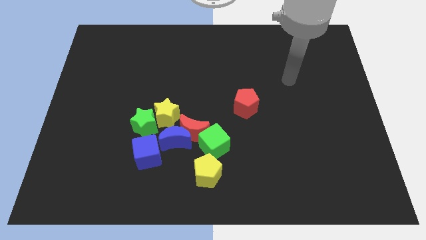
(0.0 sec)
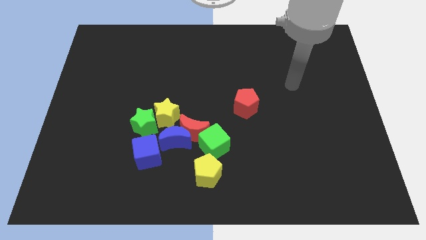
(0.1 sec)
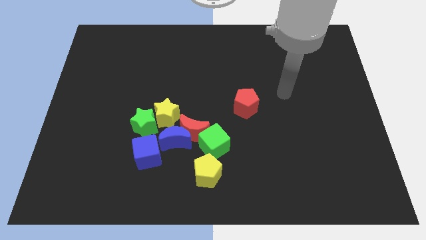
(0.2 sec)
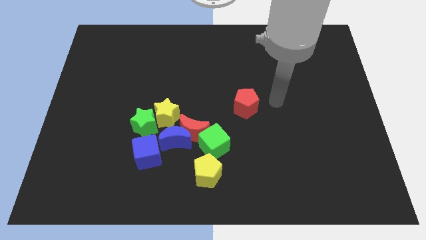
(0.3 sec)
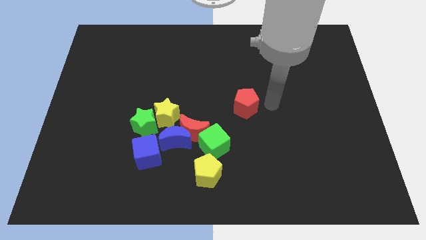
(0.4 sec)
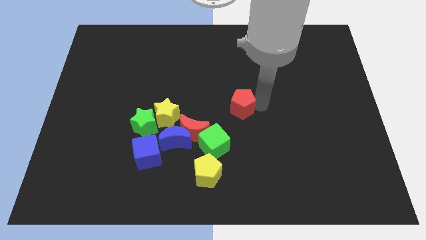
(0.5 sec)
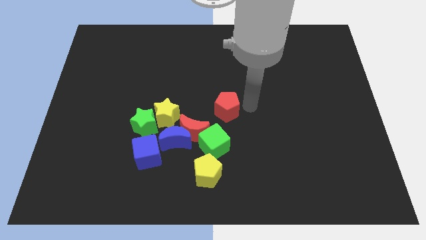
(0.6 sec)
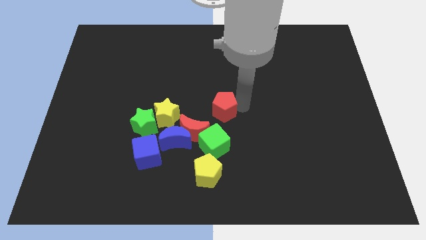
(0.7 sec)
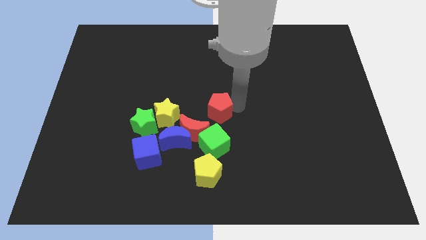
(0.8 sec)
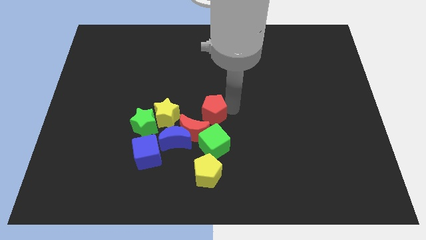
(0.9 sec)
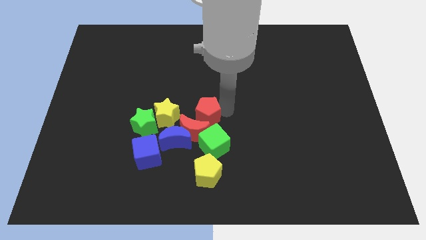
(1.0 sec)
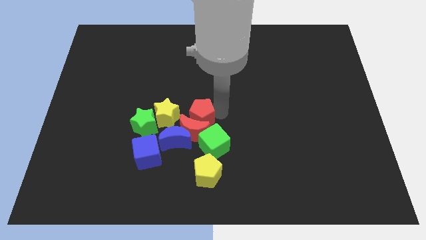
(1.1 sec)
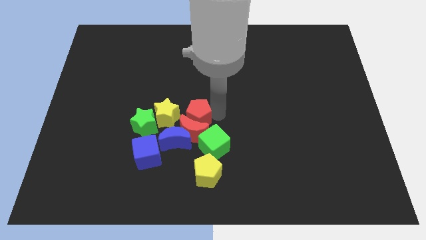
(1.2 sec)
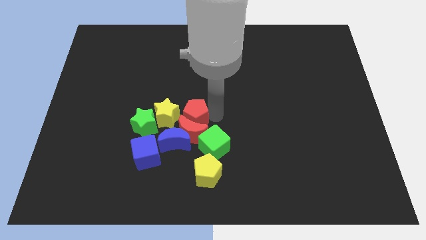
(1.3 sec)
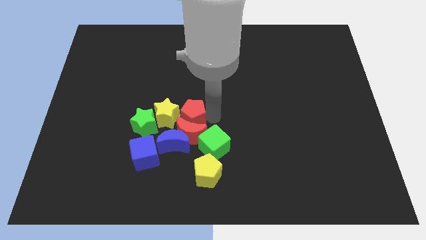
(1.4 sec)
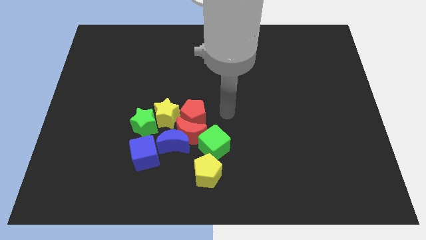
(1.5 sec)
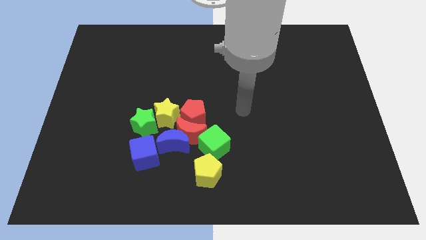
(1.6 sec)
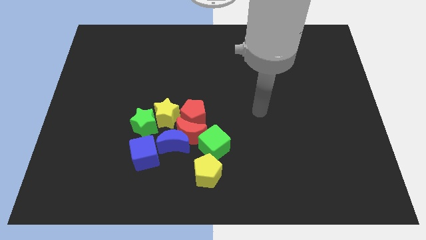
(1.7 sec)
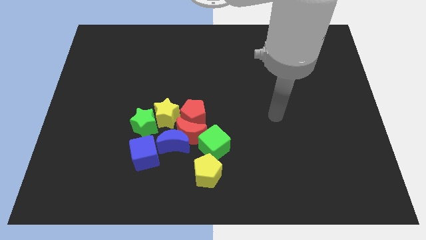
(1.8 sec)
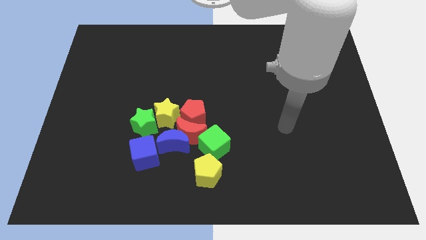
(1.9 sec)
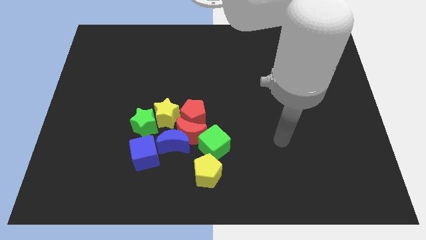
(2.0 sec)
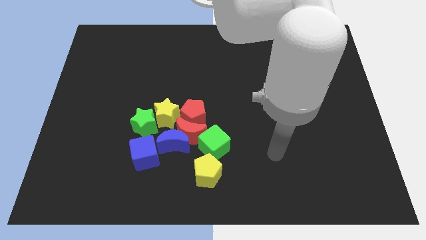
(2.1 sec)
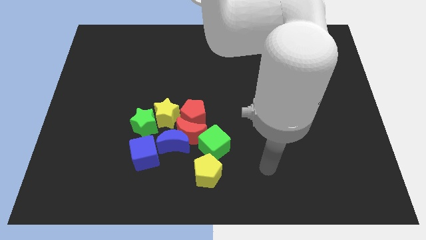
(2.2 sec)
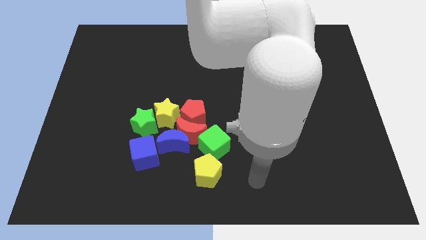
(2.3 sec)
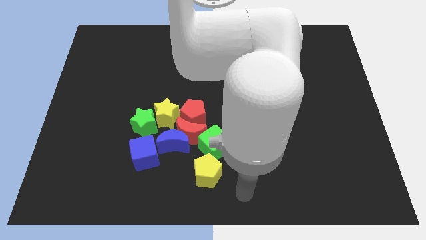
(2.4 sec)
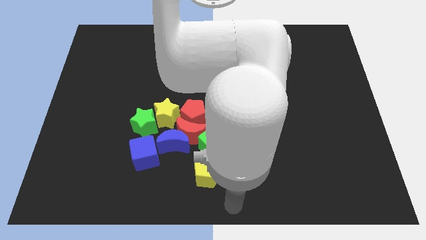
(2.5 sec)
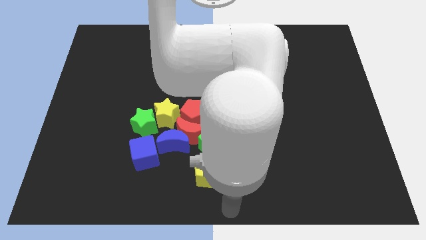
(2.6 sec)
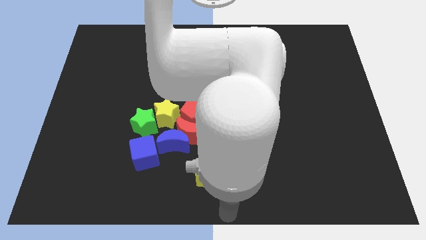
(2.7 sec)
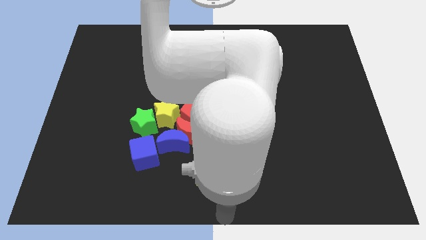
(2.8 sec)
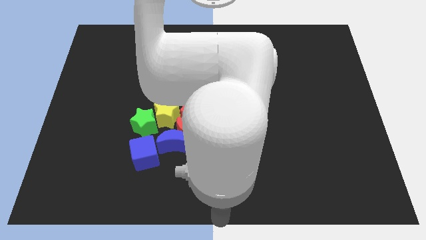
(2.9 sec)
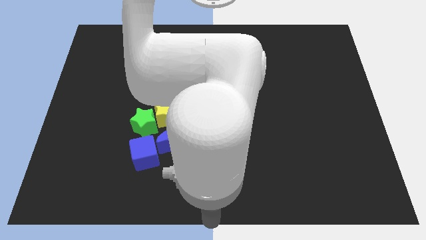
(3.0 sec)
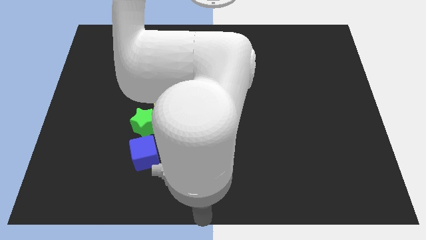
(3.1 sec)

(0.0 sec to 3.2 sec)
move the arm to the middle bottom

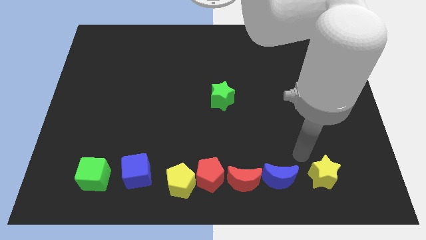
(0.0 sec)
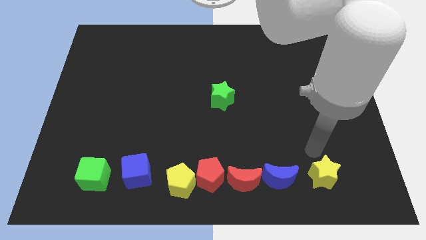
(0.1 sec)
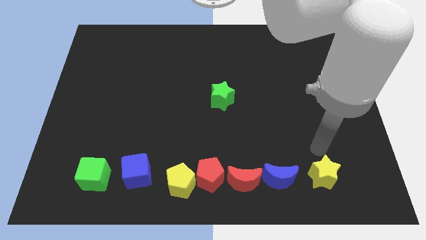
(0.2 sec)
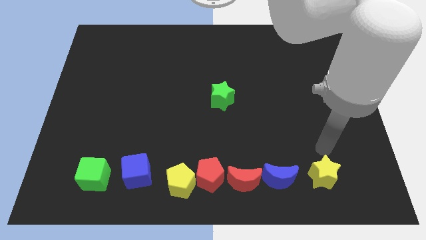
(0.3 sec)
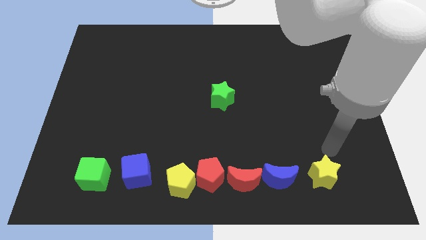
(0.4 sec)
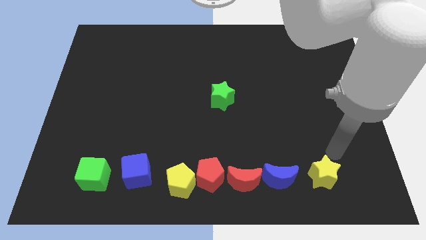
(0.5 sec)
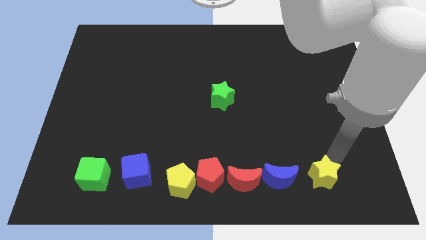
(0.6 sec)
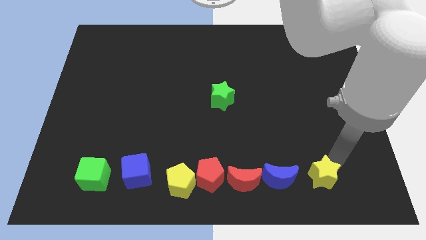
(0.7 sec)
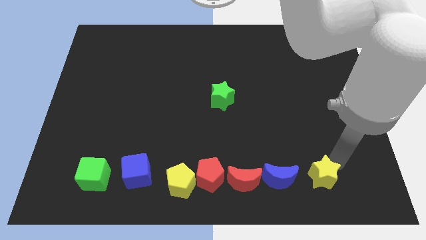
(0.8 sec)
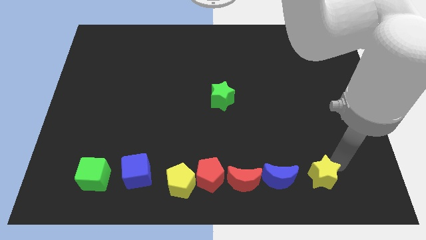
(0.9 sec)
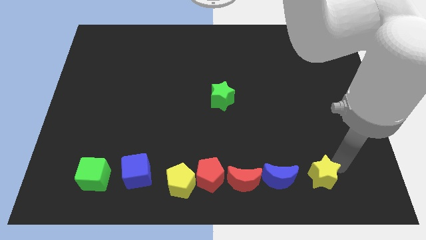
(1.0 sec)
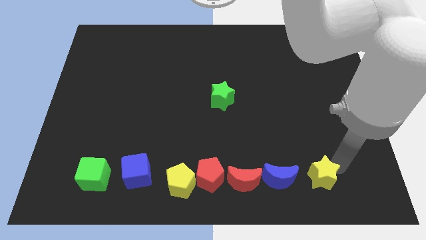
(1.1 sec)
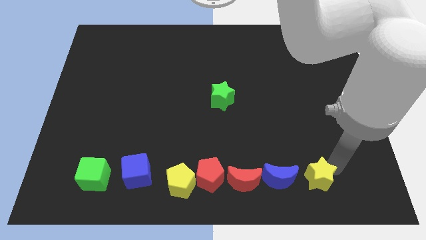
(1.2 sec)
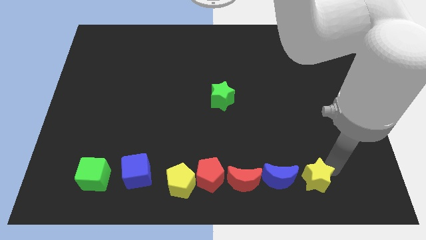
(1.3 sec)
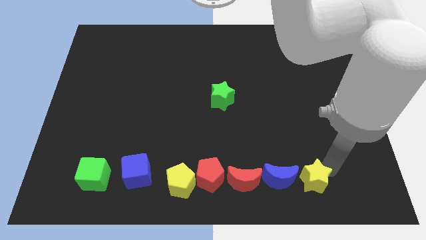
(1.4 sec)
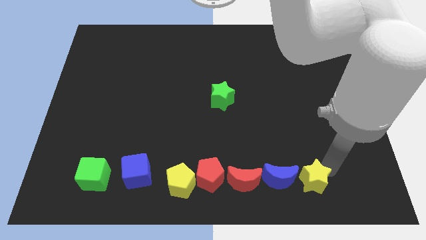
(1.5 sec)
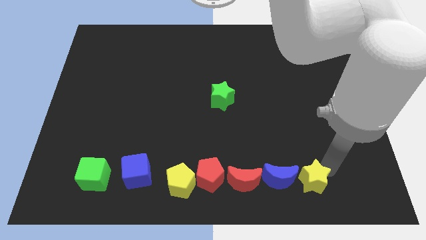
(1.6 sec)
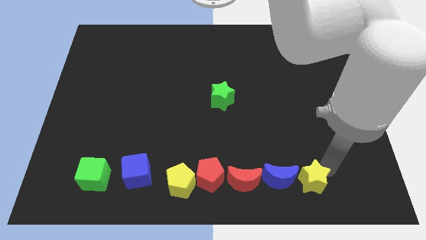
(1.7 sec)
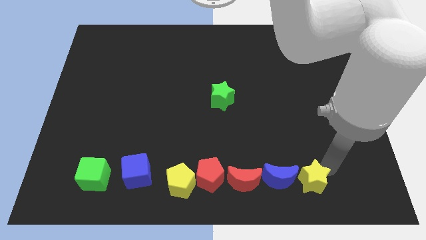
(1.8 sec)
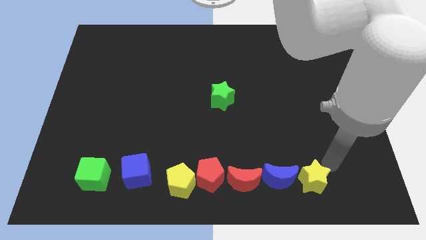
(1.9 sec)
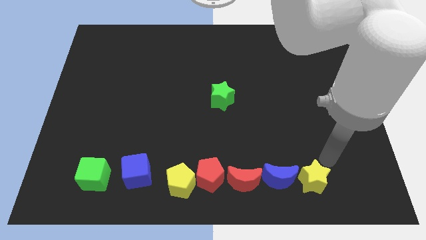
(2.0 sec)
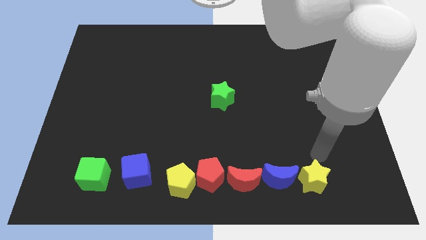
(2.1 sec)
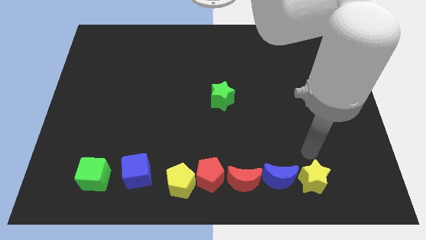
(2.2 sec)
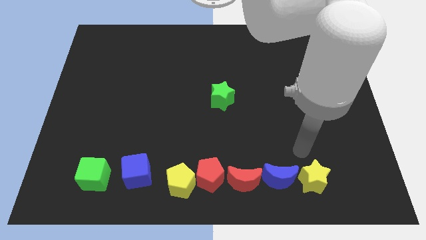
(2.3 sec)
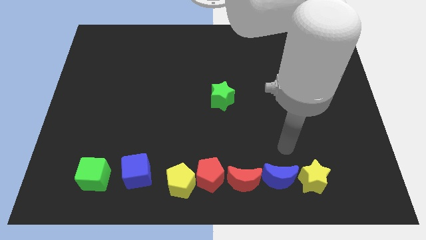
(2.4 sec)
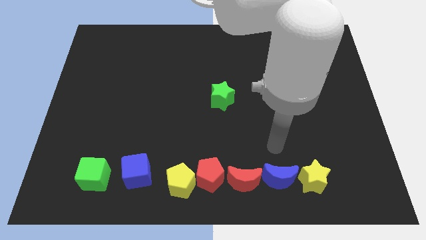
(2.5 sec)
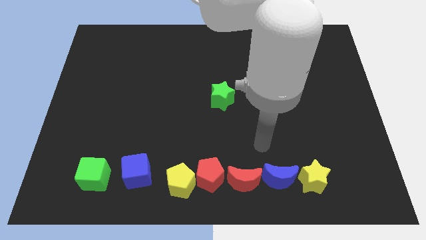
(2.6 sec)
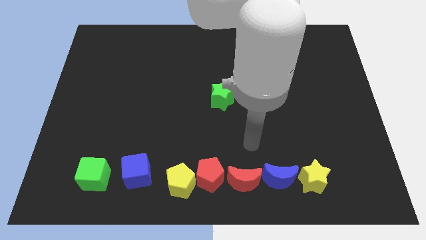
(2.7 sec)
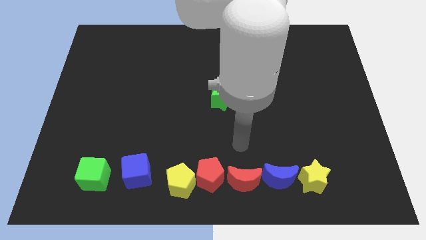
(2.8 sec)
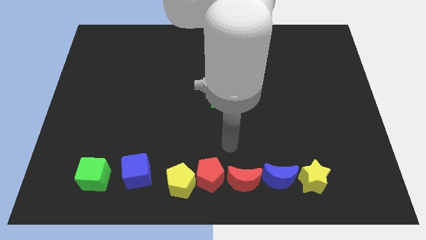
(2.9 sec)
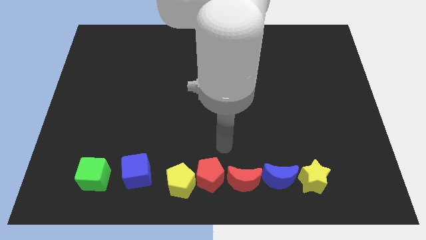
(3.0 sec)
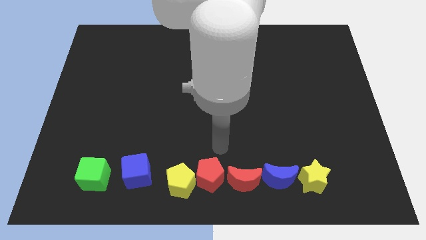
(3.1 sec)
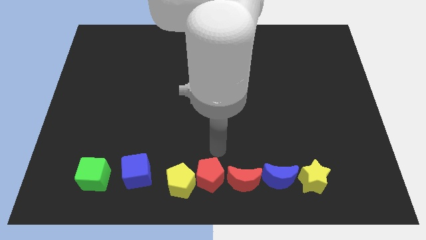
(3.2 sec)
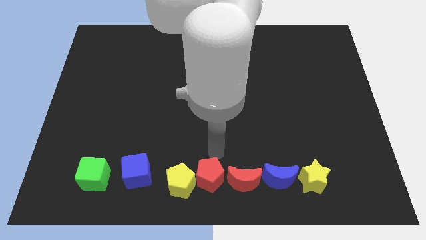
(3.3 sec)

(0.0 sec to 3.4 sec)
move the yellow star to the right of the blue moon

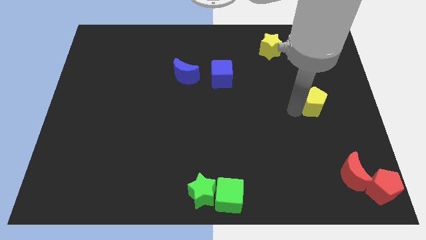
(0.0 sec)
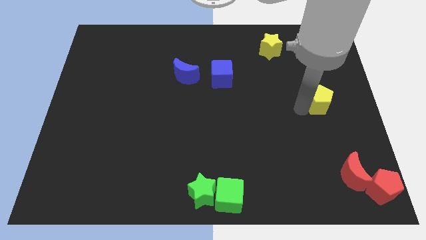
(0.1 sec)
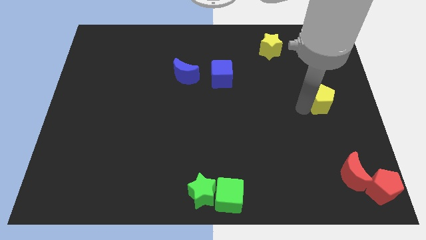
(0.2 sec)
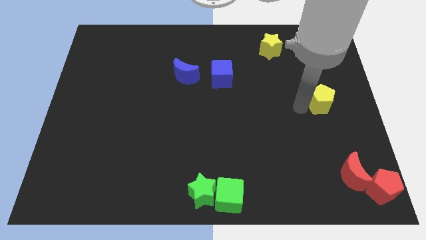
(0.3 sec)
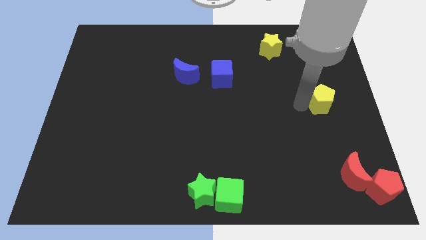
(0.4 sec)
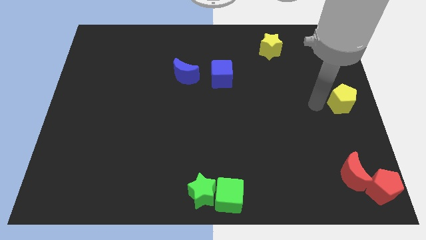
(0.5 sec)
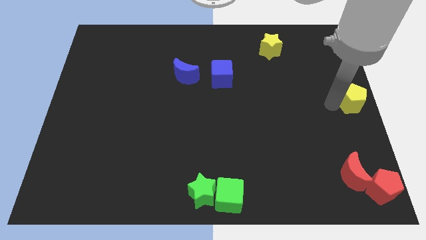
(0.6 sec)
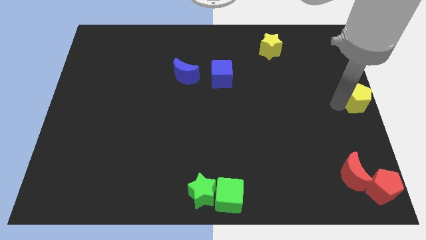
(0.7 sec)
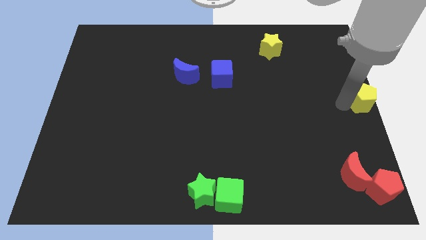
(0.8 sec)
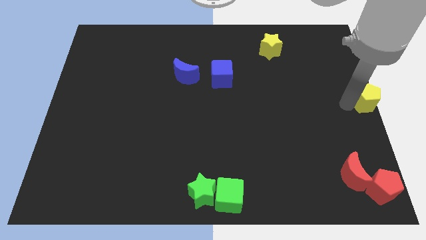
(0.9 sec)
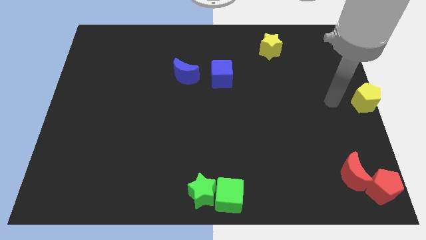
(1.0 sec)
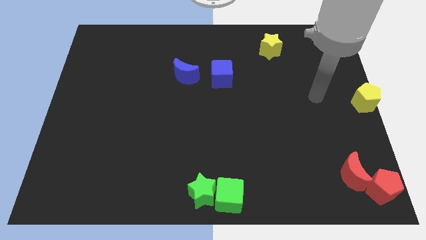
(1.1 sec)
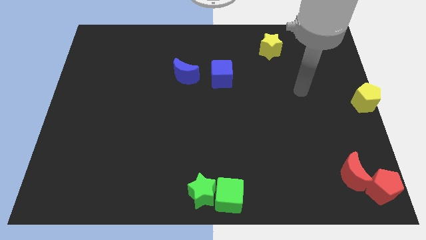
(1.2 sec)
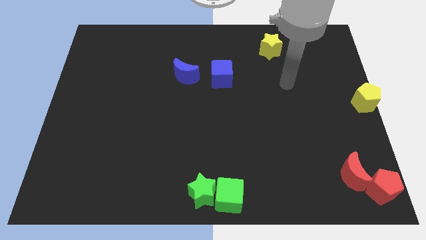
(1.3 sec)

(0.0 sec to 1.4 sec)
push the yellow pentagon to the right center of the board

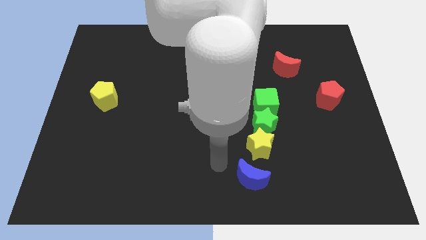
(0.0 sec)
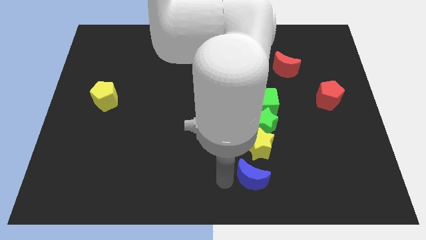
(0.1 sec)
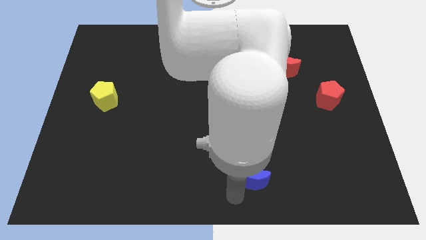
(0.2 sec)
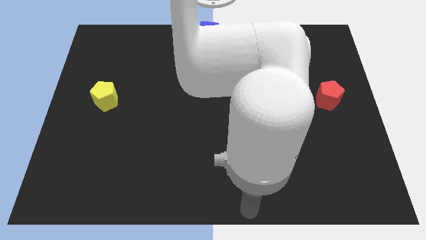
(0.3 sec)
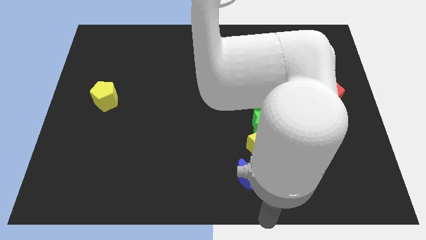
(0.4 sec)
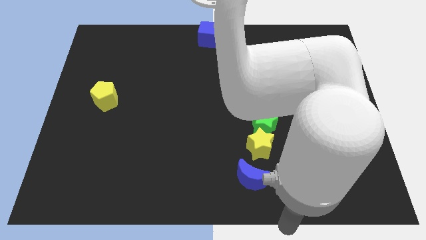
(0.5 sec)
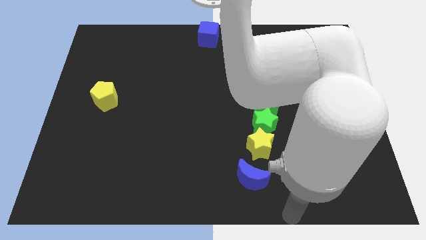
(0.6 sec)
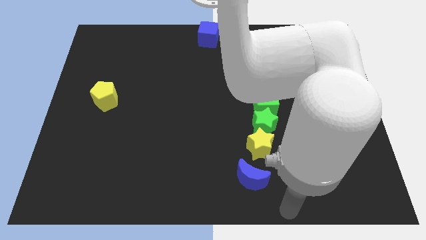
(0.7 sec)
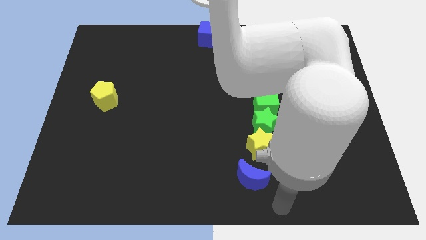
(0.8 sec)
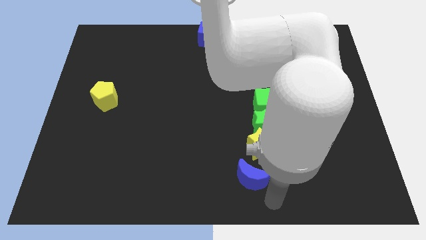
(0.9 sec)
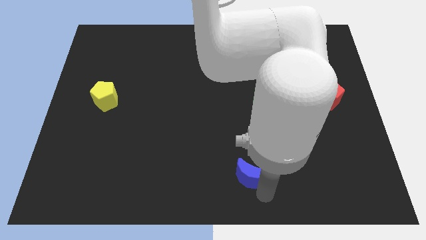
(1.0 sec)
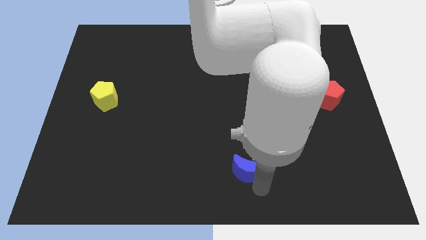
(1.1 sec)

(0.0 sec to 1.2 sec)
touch the bottom of blue moon
